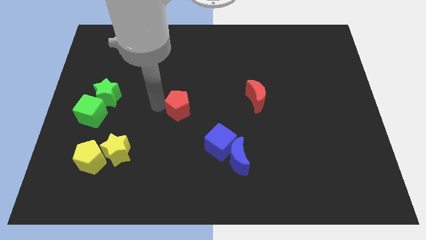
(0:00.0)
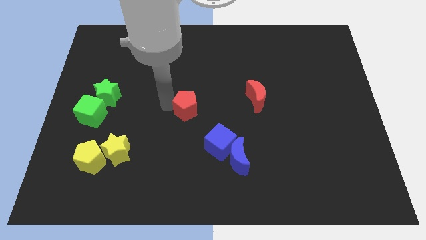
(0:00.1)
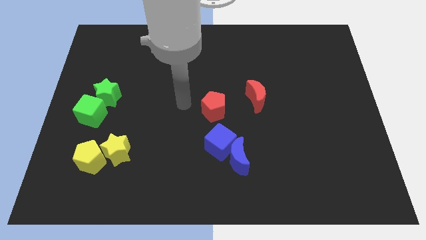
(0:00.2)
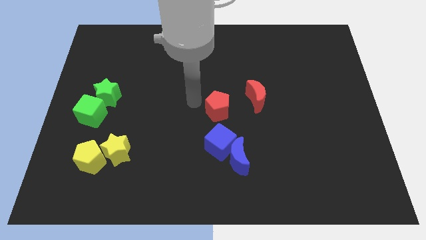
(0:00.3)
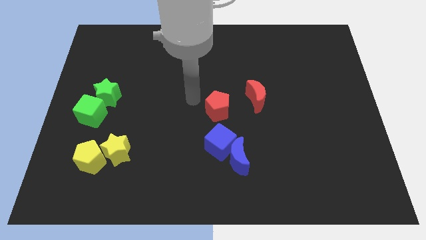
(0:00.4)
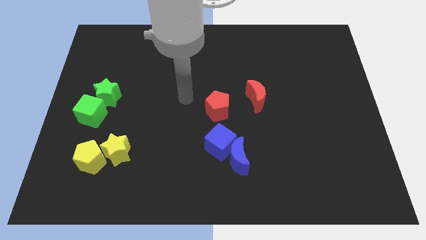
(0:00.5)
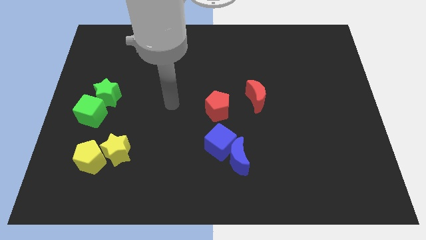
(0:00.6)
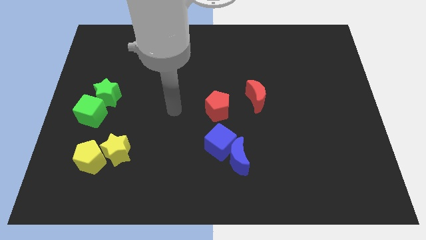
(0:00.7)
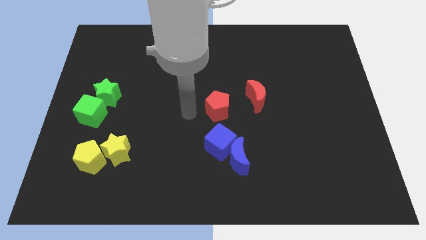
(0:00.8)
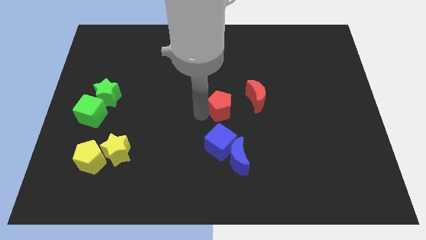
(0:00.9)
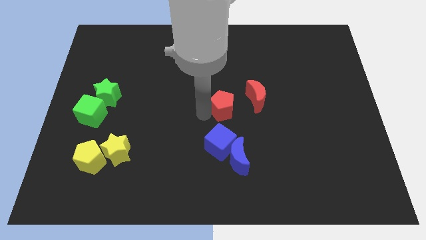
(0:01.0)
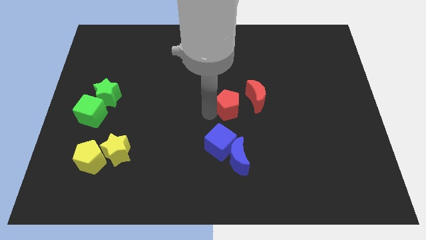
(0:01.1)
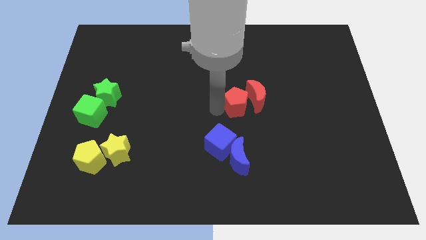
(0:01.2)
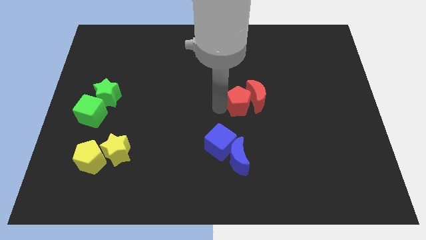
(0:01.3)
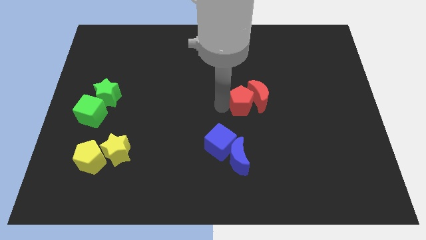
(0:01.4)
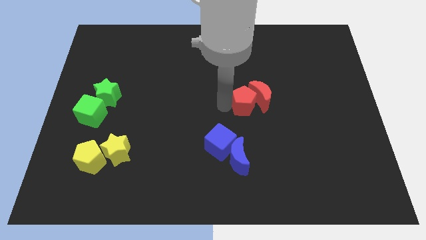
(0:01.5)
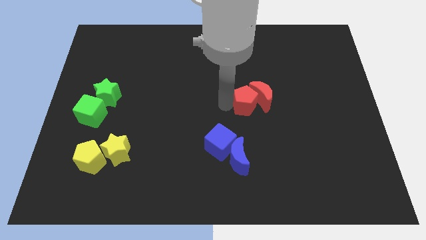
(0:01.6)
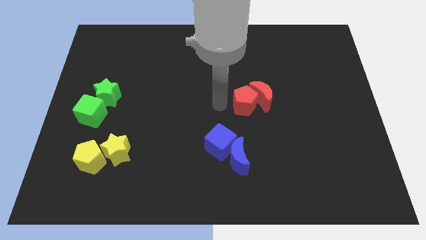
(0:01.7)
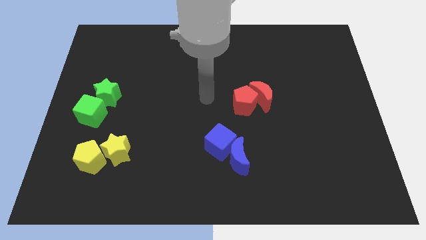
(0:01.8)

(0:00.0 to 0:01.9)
move the red pentagon into the red crescent

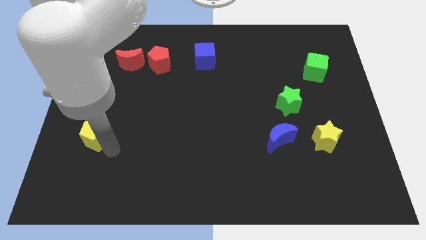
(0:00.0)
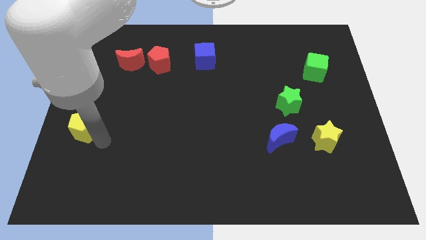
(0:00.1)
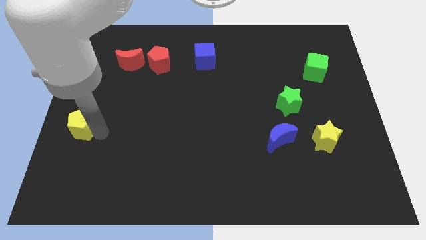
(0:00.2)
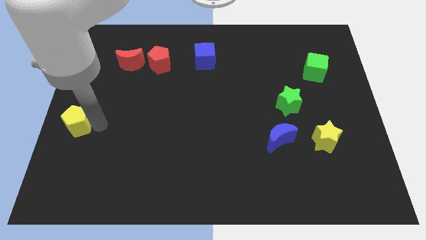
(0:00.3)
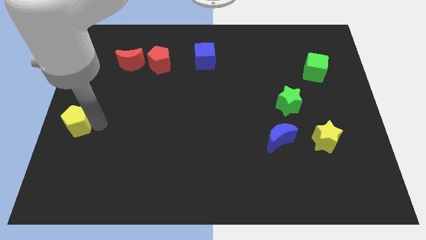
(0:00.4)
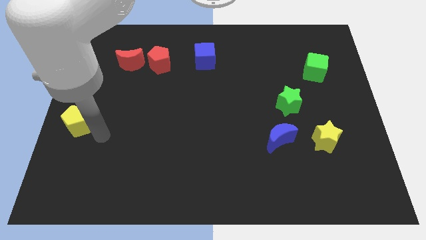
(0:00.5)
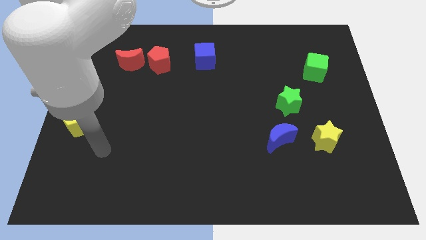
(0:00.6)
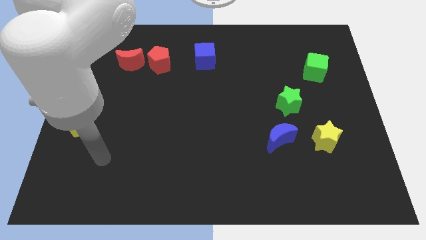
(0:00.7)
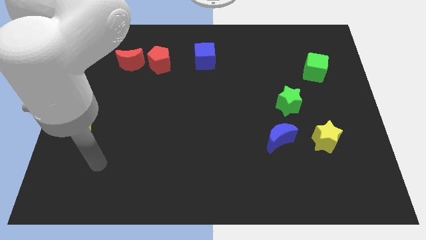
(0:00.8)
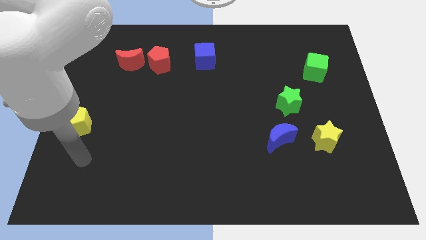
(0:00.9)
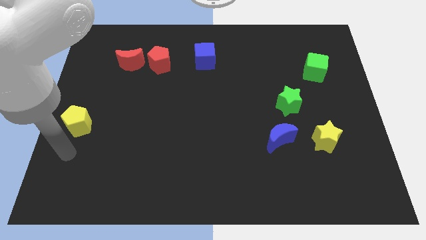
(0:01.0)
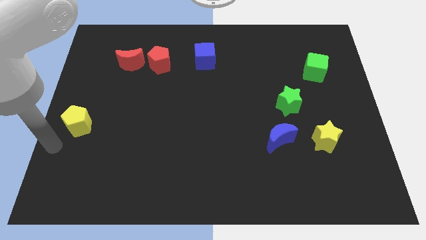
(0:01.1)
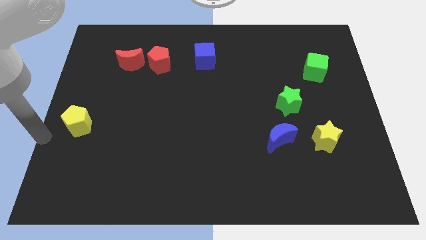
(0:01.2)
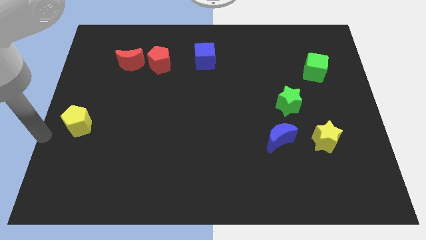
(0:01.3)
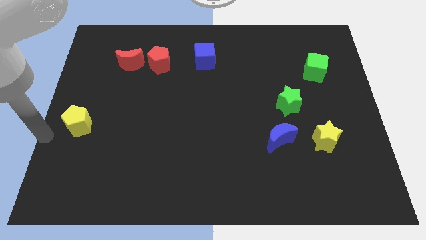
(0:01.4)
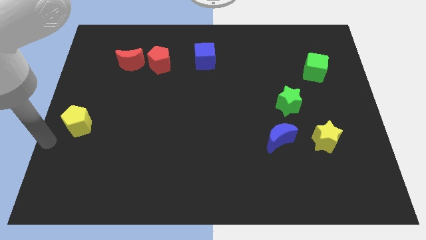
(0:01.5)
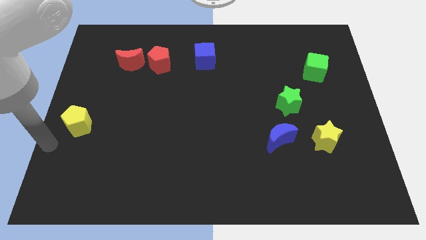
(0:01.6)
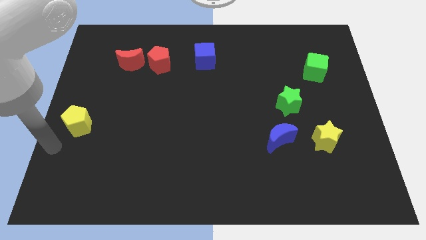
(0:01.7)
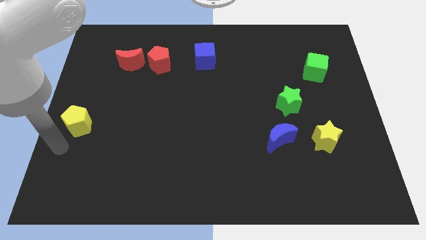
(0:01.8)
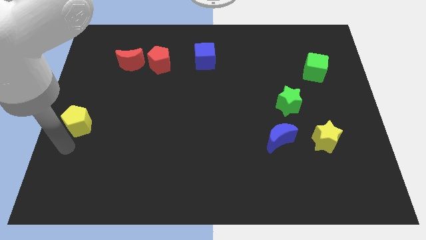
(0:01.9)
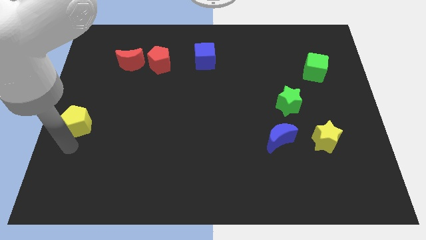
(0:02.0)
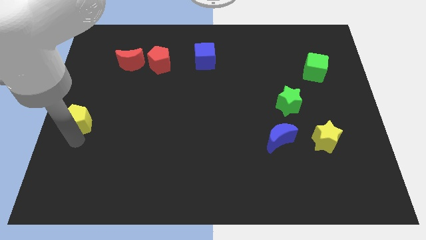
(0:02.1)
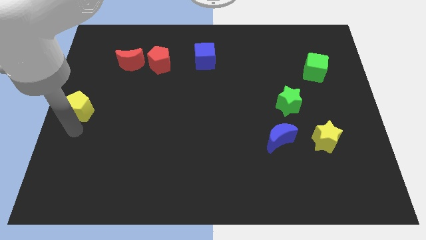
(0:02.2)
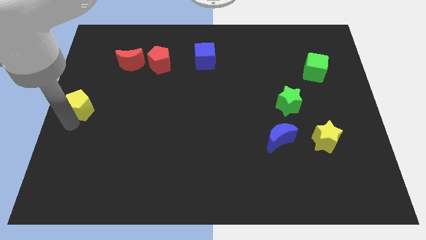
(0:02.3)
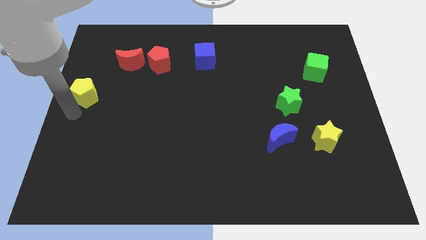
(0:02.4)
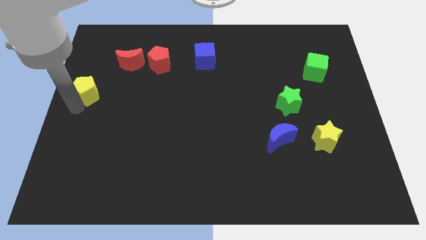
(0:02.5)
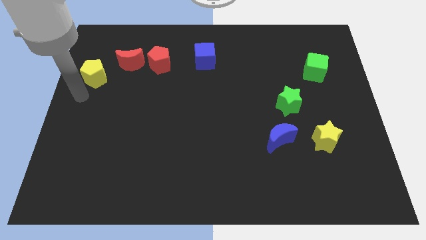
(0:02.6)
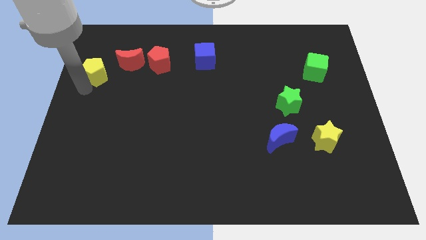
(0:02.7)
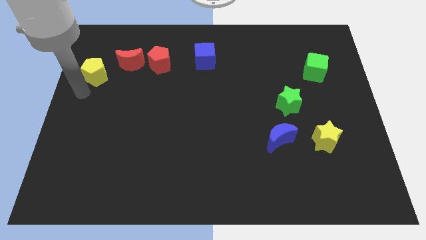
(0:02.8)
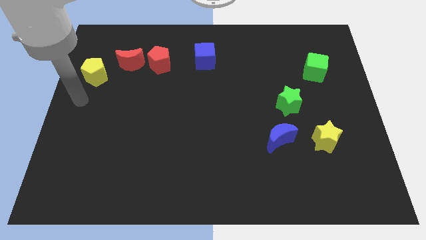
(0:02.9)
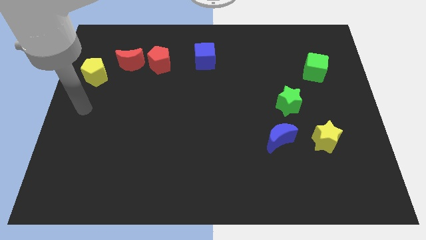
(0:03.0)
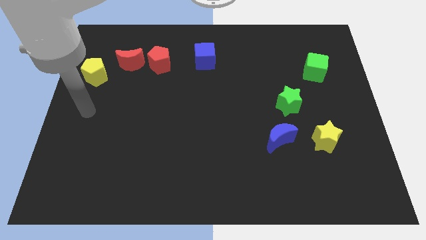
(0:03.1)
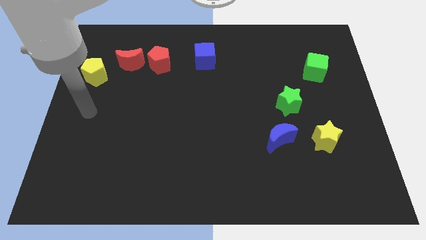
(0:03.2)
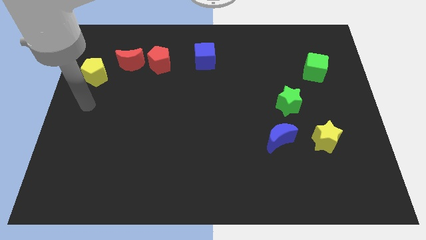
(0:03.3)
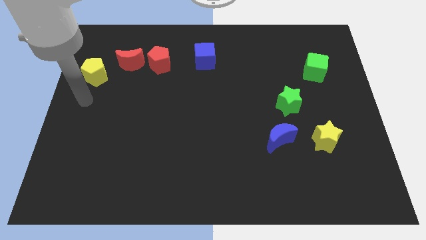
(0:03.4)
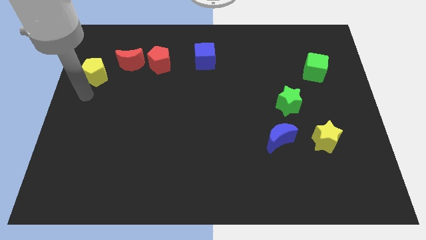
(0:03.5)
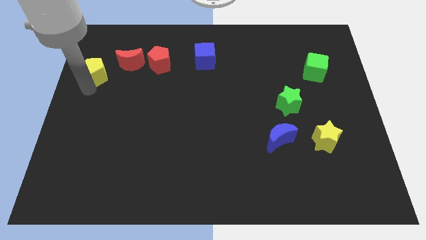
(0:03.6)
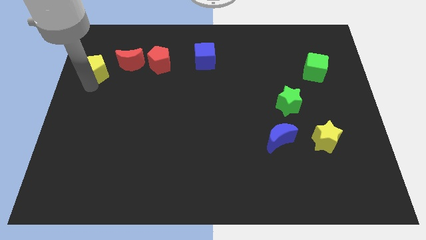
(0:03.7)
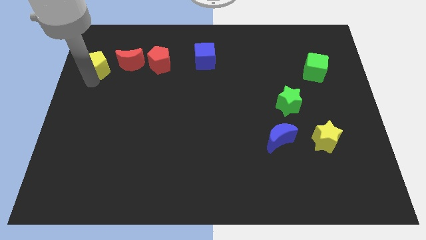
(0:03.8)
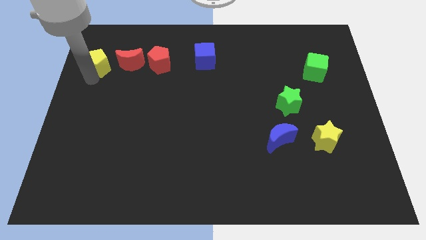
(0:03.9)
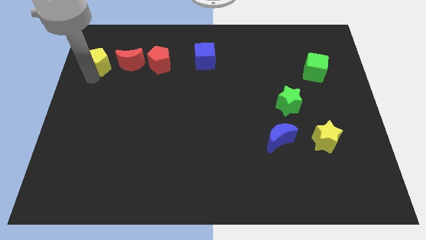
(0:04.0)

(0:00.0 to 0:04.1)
move the yellow pentagon left to red moon

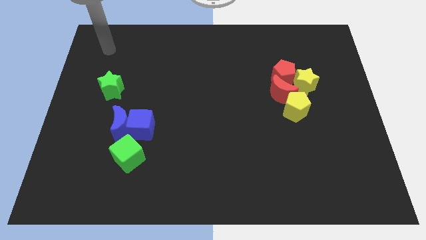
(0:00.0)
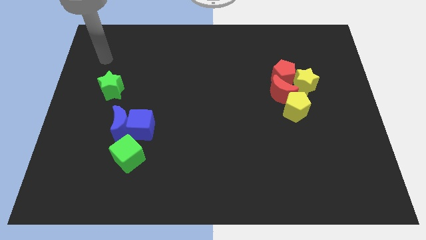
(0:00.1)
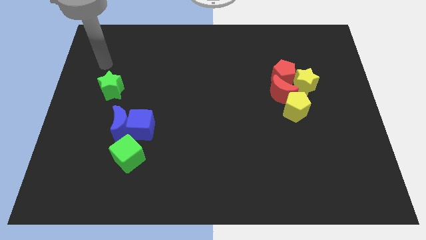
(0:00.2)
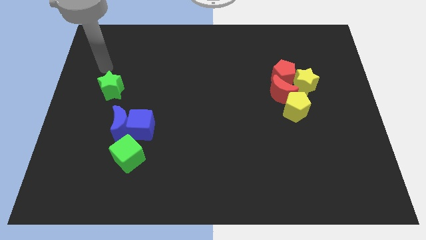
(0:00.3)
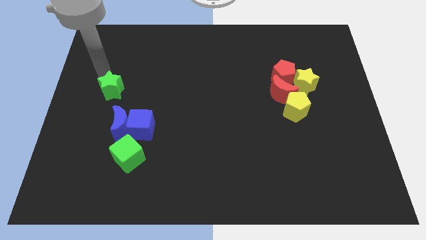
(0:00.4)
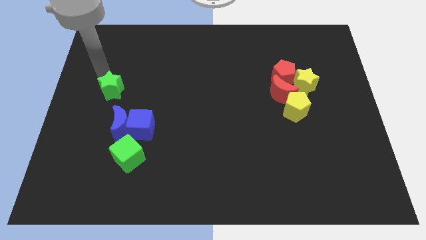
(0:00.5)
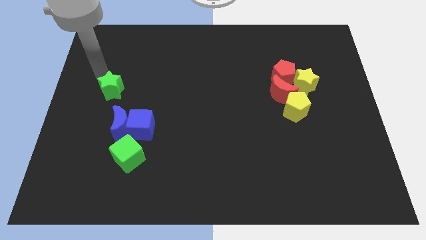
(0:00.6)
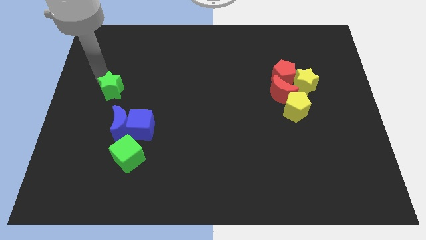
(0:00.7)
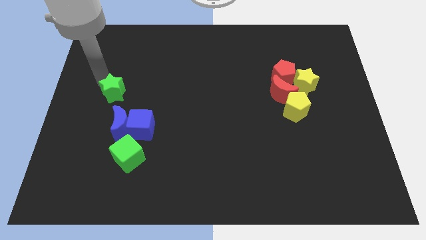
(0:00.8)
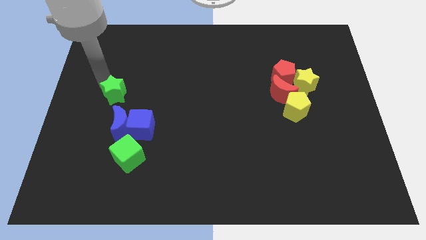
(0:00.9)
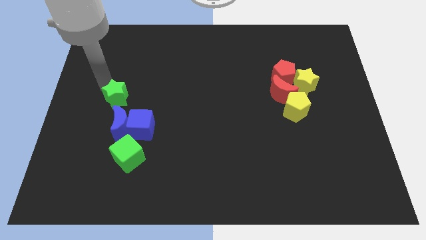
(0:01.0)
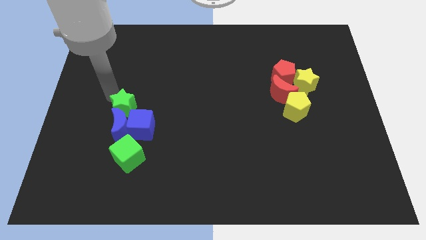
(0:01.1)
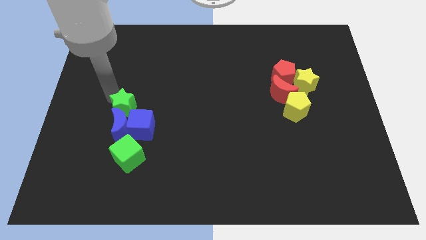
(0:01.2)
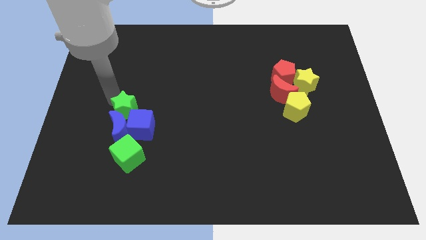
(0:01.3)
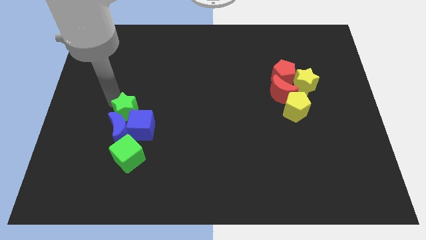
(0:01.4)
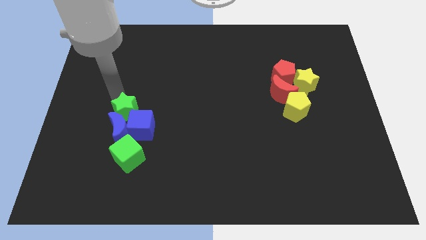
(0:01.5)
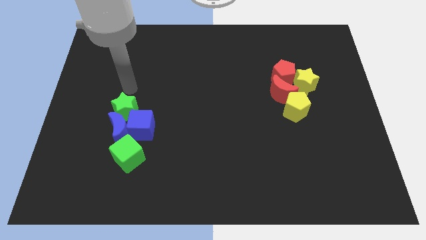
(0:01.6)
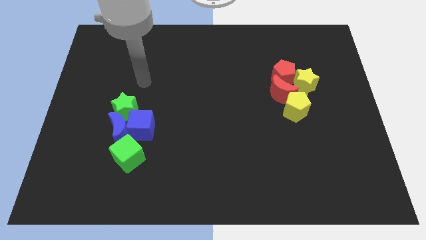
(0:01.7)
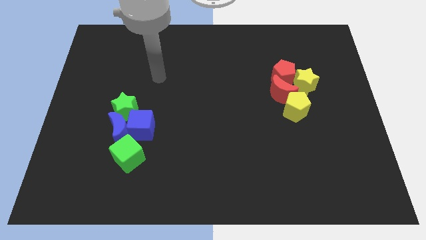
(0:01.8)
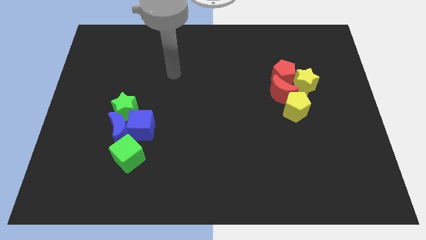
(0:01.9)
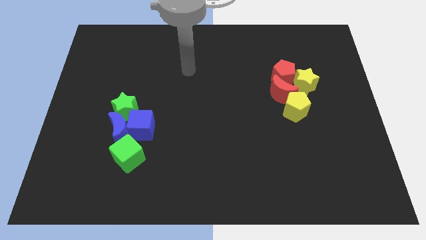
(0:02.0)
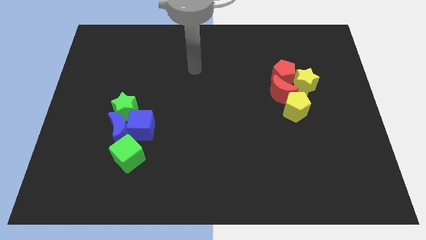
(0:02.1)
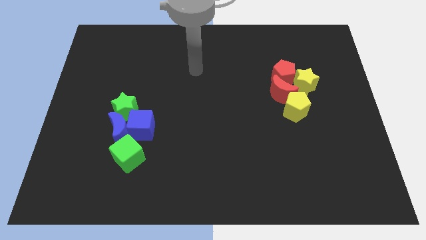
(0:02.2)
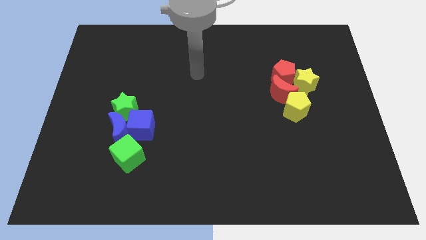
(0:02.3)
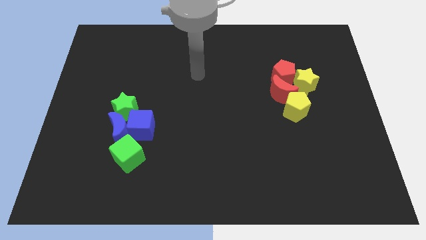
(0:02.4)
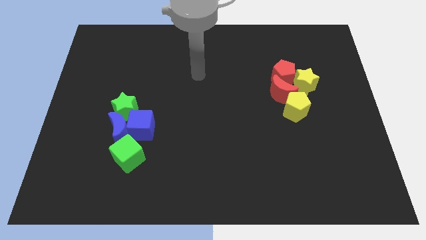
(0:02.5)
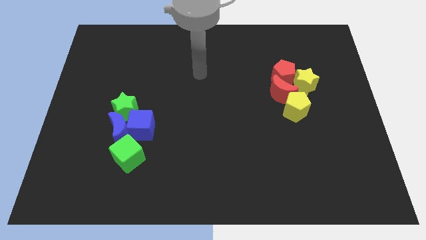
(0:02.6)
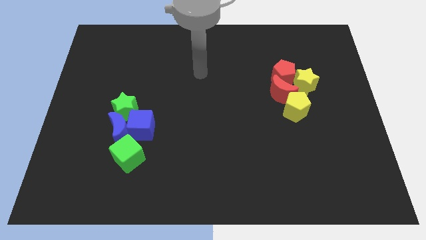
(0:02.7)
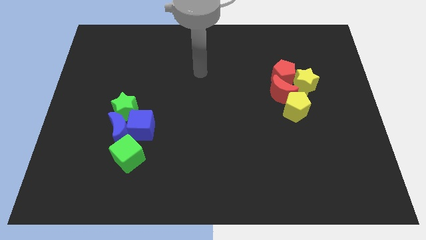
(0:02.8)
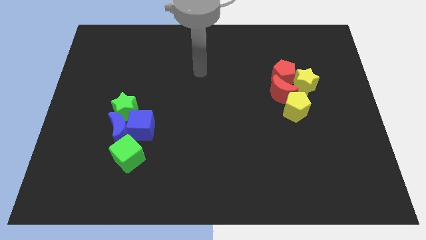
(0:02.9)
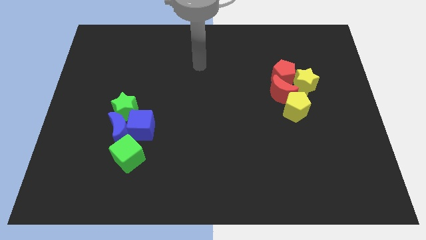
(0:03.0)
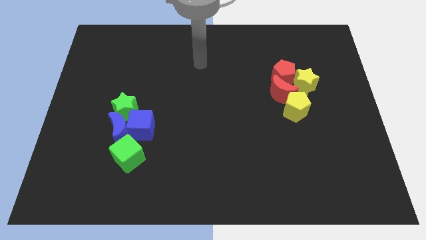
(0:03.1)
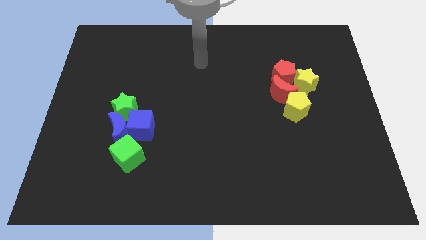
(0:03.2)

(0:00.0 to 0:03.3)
move the green star above the blue blocks
